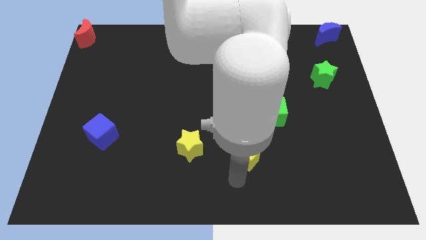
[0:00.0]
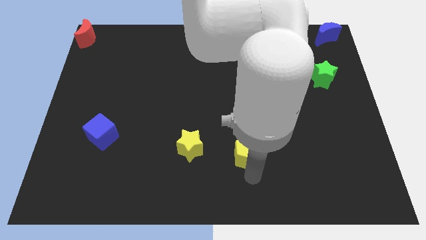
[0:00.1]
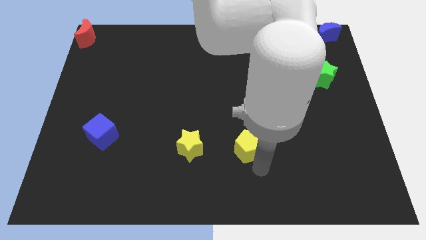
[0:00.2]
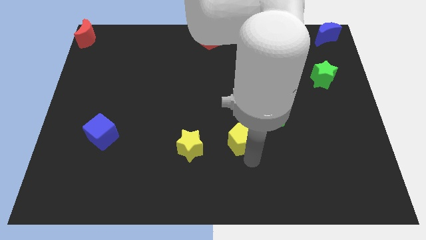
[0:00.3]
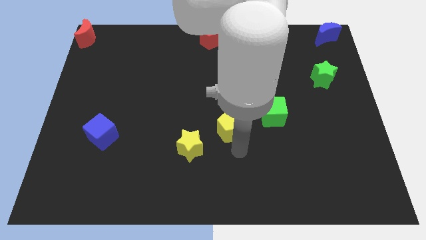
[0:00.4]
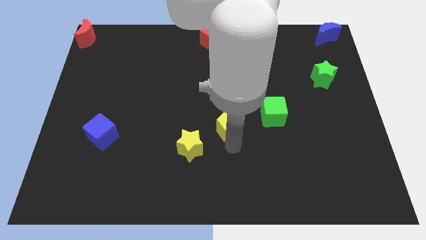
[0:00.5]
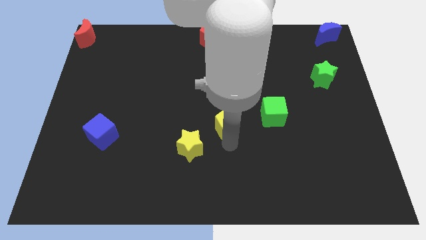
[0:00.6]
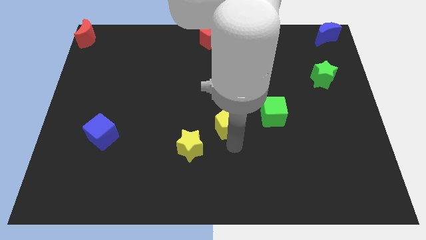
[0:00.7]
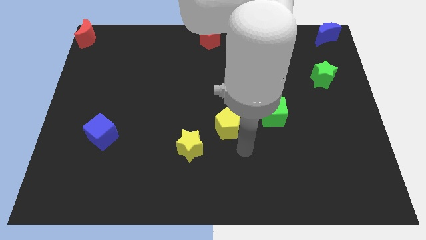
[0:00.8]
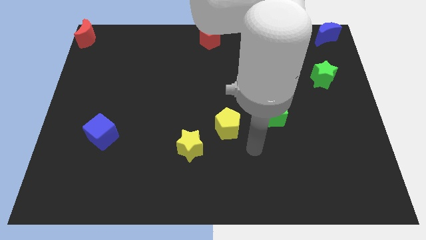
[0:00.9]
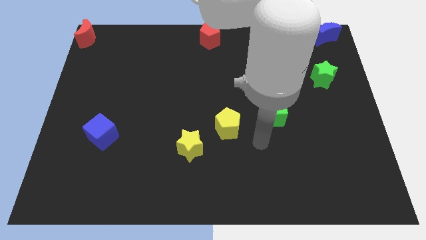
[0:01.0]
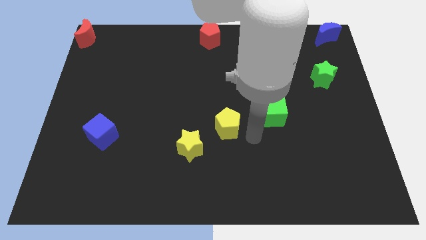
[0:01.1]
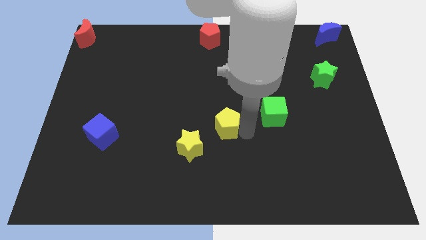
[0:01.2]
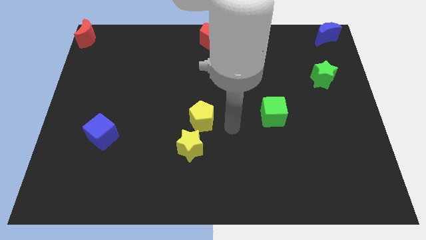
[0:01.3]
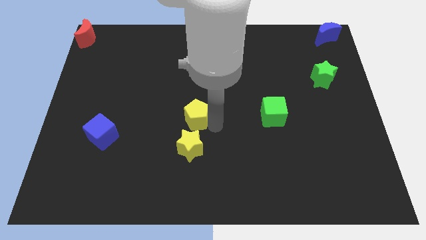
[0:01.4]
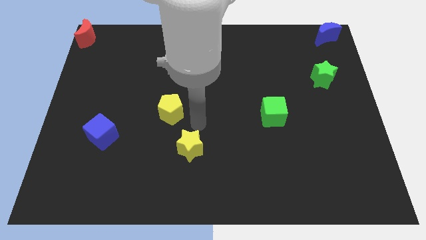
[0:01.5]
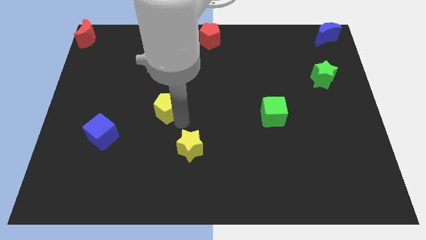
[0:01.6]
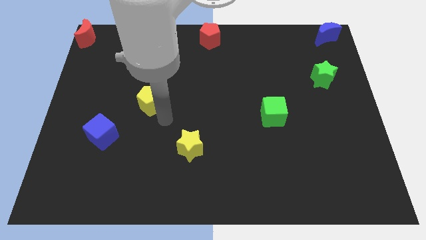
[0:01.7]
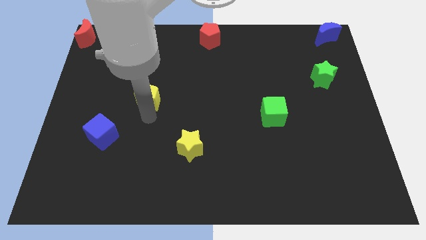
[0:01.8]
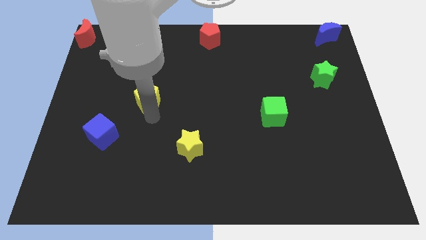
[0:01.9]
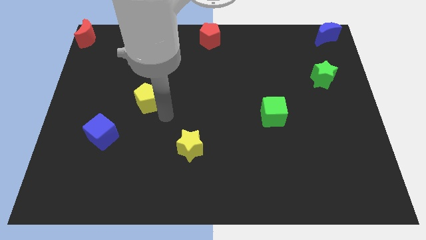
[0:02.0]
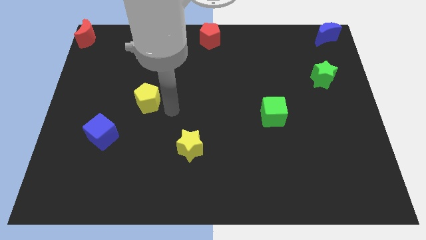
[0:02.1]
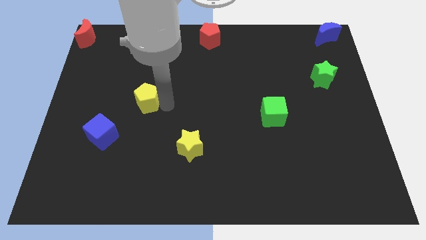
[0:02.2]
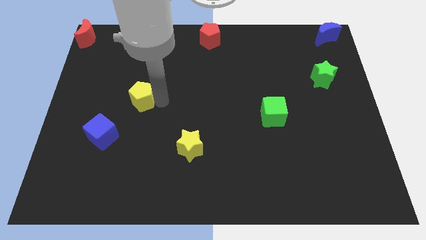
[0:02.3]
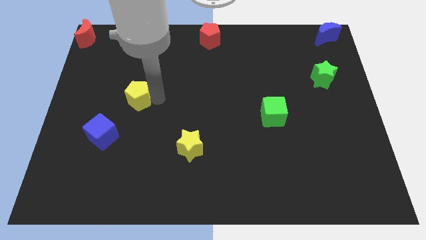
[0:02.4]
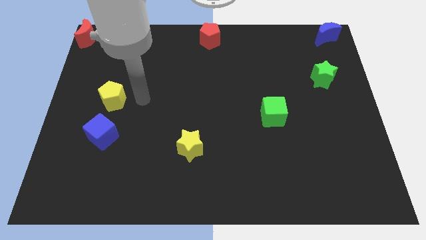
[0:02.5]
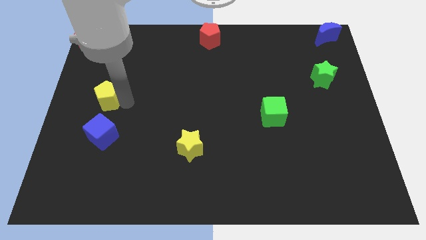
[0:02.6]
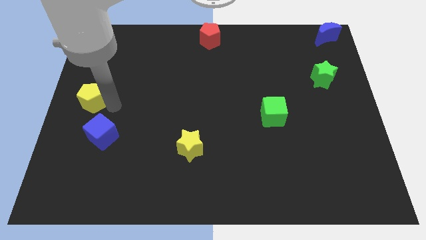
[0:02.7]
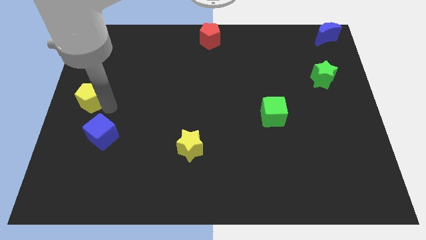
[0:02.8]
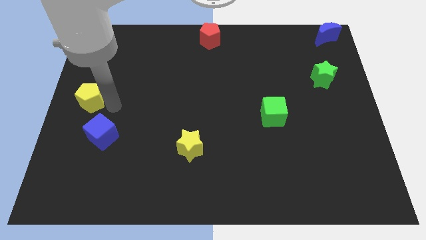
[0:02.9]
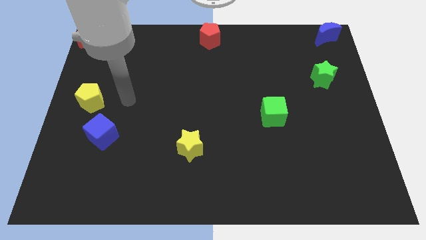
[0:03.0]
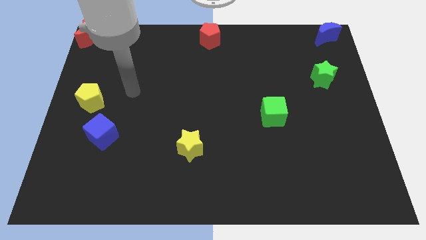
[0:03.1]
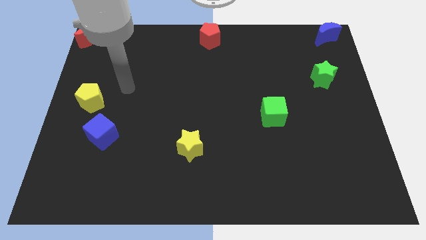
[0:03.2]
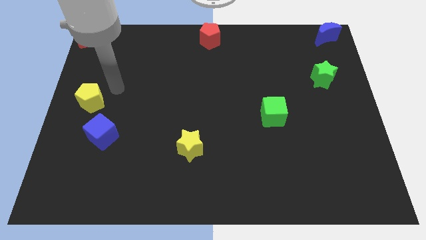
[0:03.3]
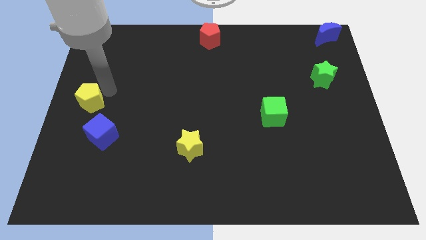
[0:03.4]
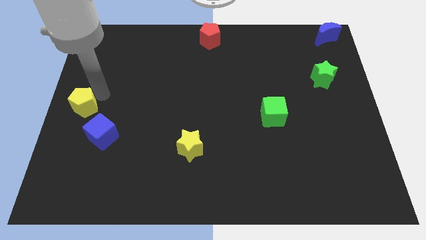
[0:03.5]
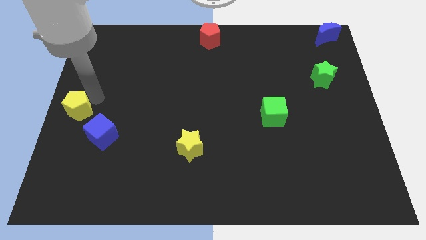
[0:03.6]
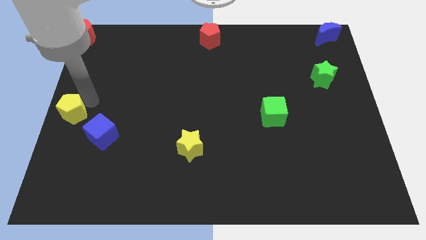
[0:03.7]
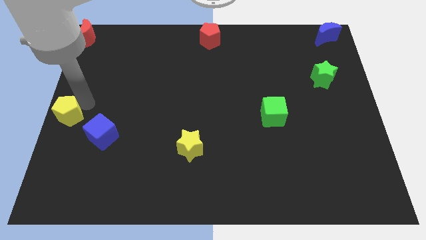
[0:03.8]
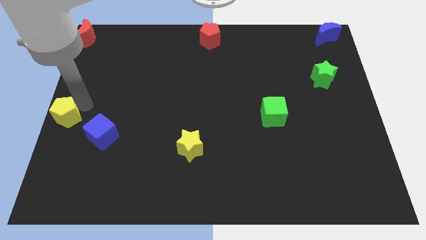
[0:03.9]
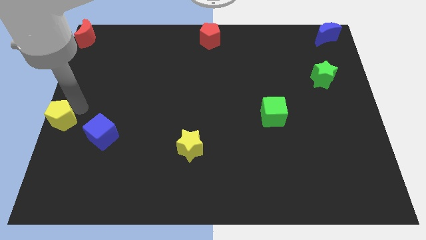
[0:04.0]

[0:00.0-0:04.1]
move the yellow pentagon to the middle left of the board

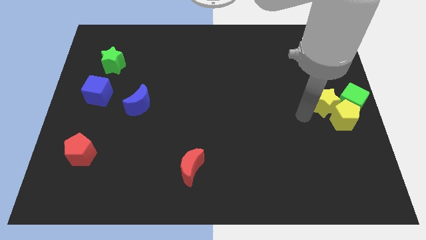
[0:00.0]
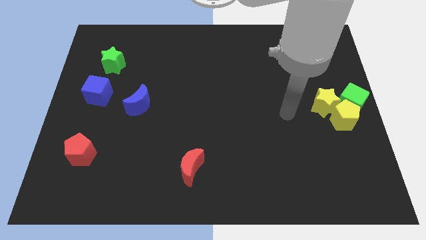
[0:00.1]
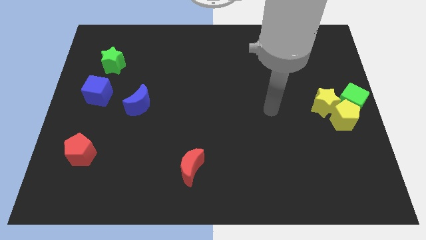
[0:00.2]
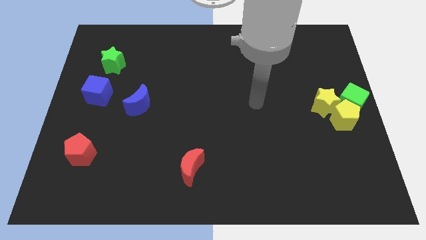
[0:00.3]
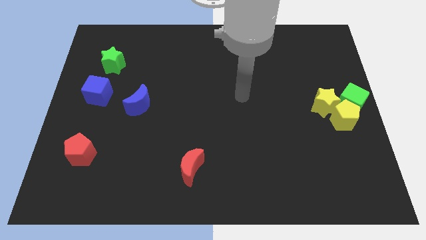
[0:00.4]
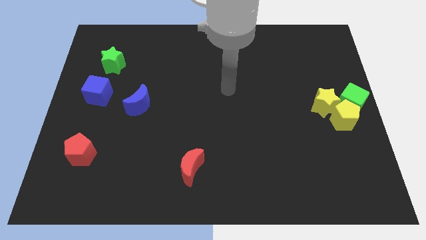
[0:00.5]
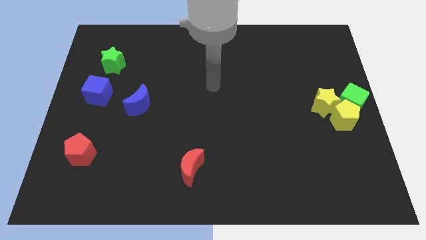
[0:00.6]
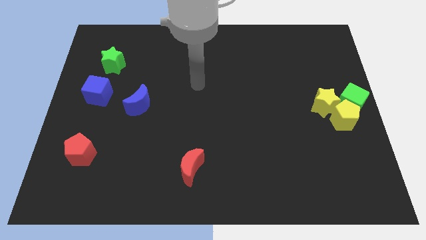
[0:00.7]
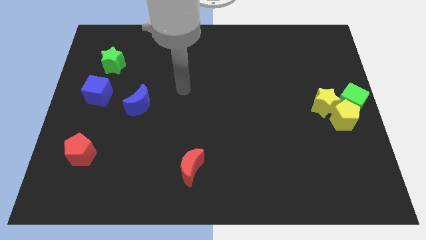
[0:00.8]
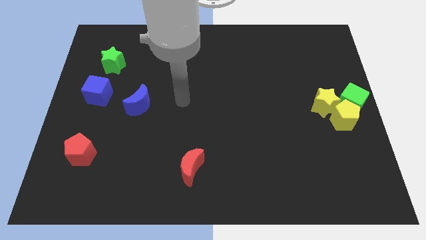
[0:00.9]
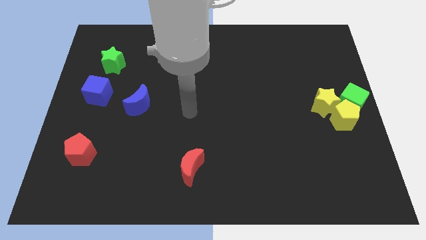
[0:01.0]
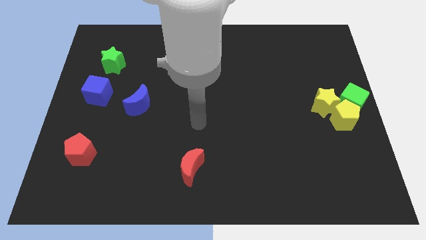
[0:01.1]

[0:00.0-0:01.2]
point the arm above the red moon

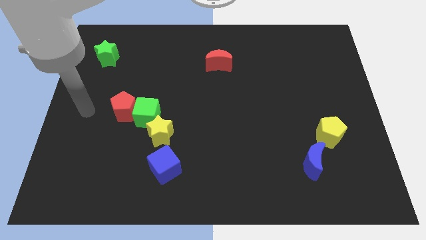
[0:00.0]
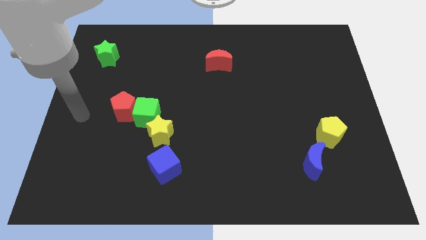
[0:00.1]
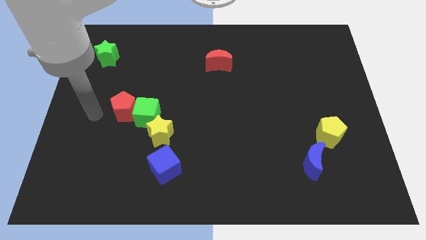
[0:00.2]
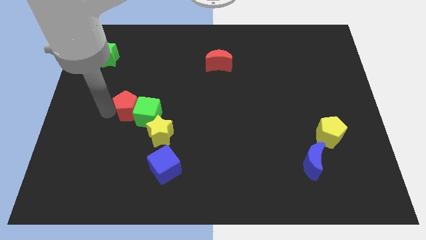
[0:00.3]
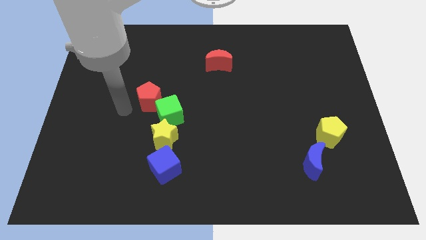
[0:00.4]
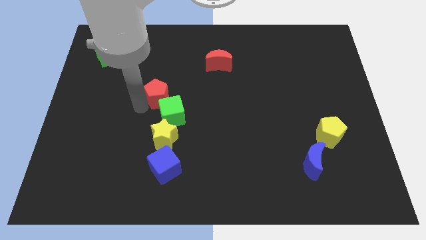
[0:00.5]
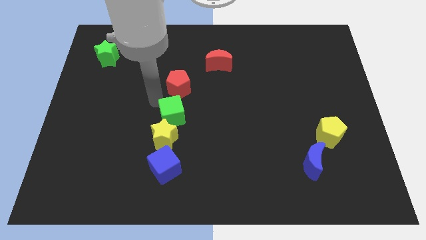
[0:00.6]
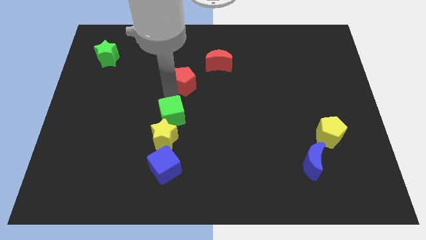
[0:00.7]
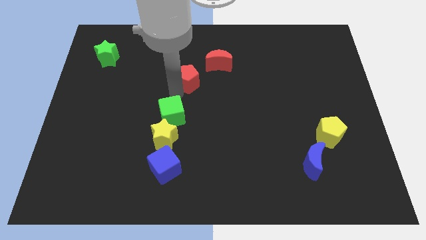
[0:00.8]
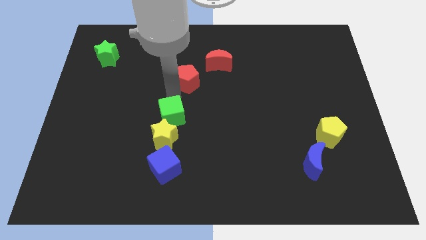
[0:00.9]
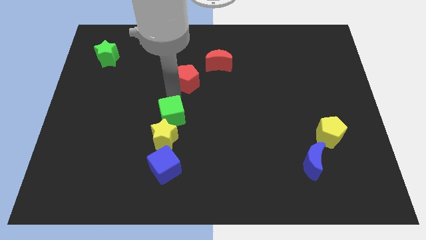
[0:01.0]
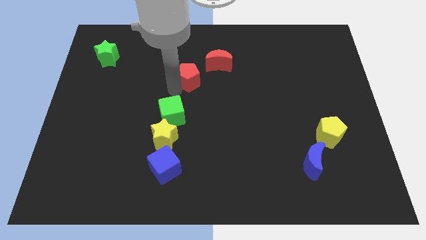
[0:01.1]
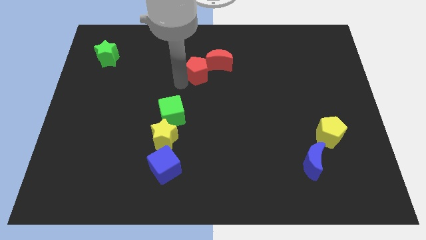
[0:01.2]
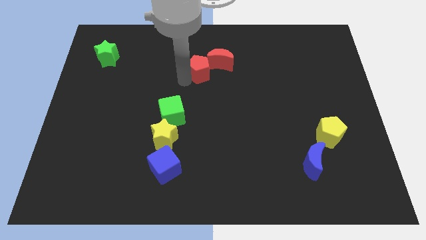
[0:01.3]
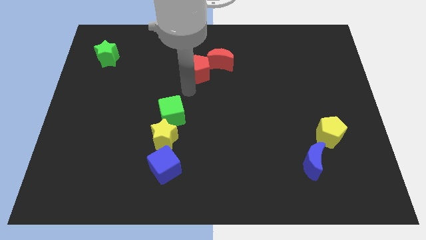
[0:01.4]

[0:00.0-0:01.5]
push red pentagon into red moon

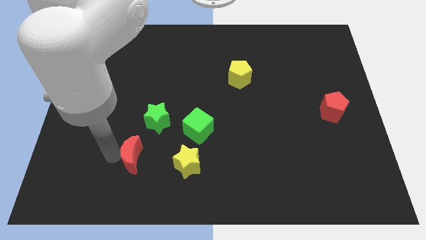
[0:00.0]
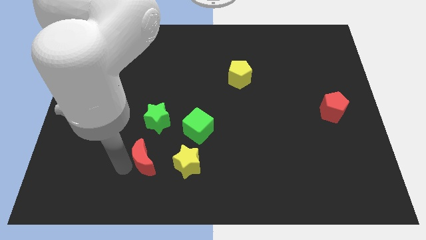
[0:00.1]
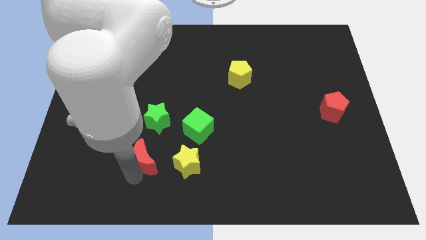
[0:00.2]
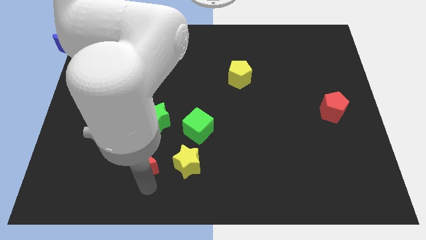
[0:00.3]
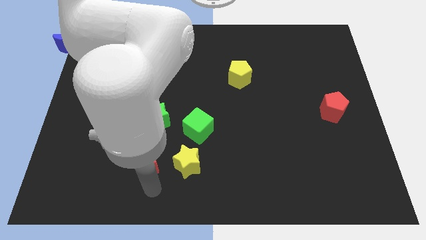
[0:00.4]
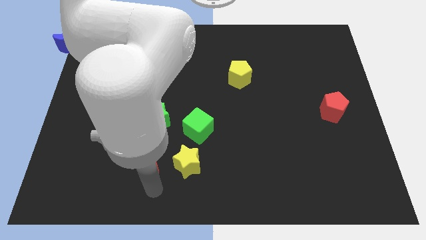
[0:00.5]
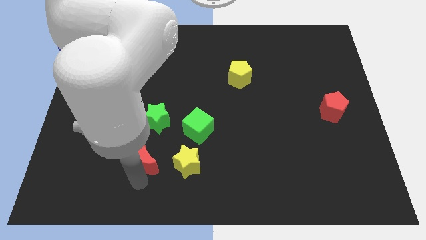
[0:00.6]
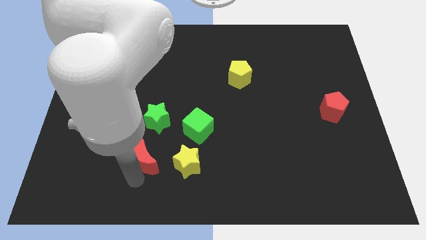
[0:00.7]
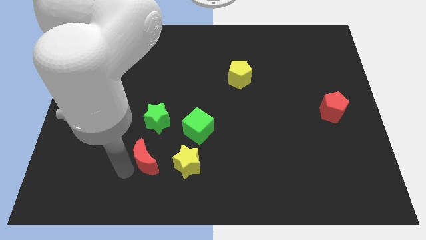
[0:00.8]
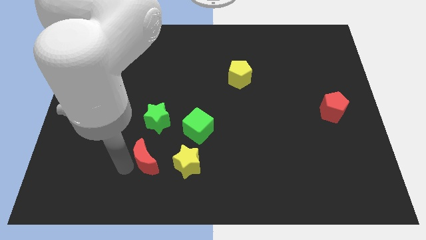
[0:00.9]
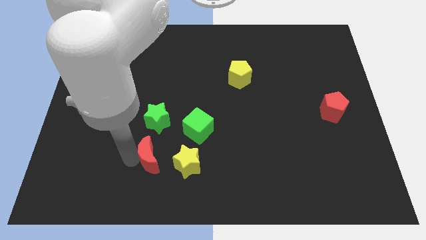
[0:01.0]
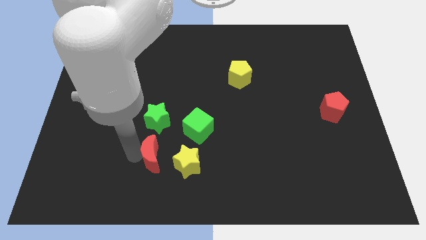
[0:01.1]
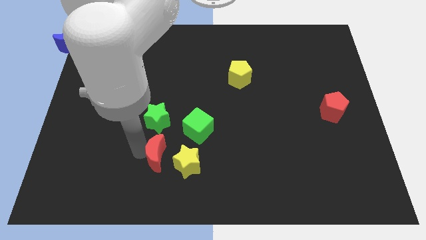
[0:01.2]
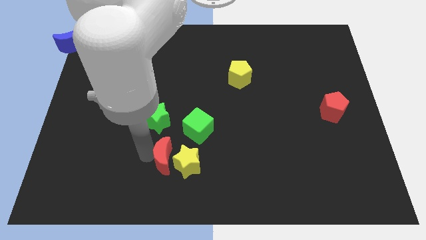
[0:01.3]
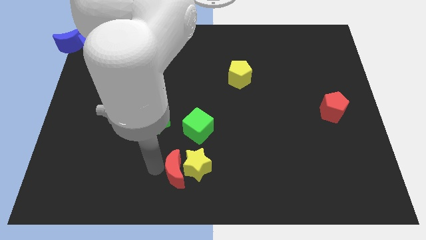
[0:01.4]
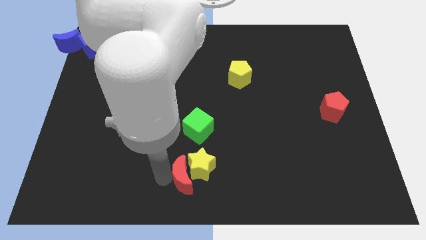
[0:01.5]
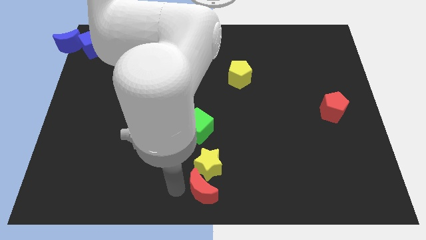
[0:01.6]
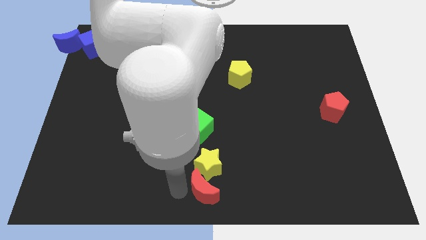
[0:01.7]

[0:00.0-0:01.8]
slide the red crescent at the bottom side of the yellow star

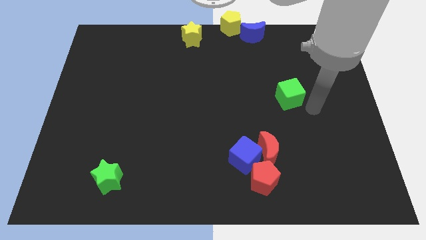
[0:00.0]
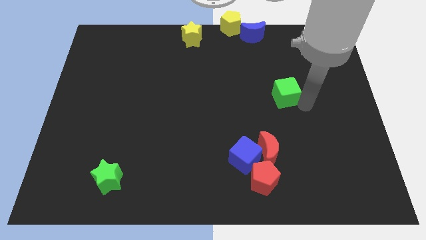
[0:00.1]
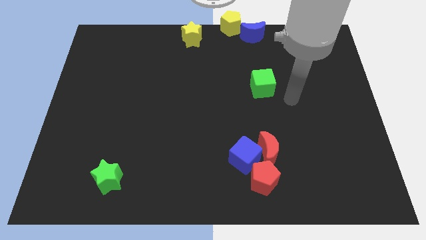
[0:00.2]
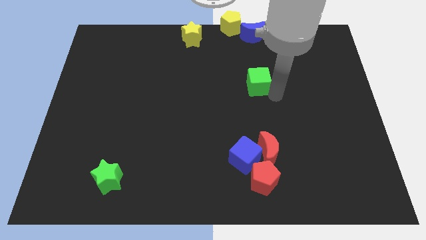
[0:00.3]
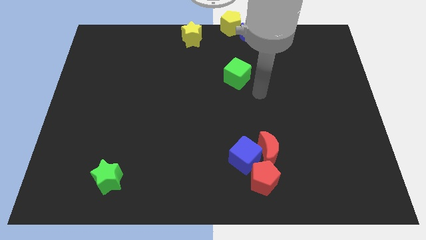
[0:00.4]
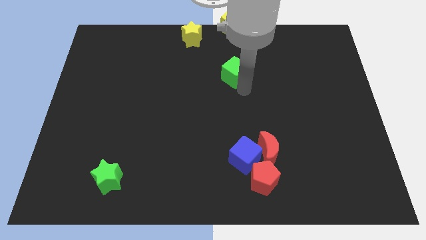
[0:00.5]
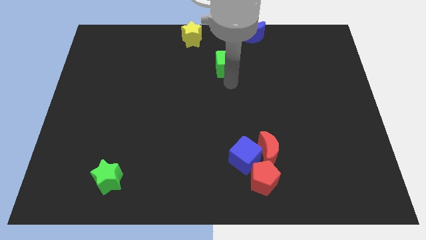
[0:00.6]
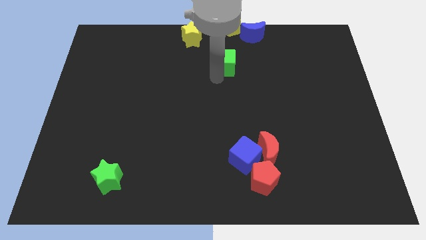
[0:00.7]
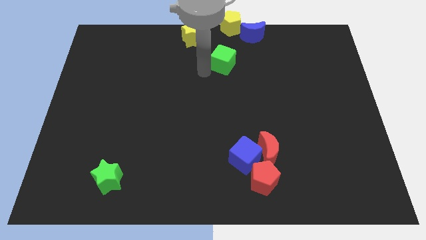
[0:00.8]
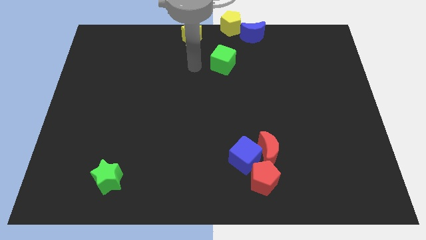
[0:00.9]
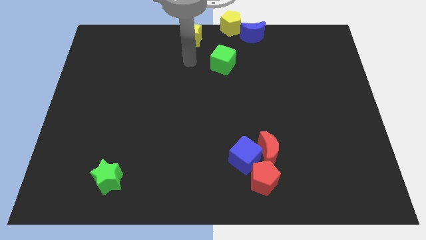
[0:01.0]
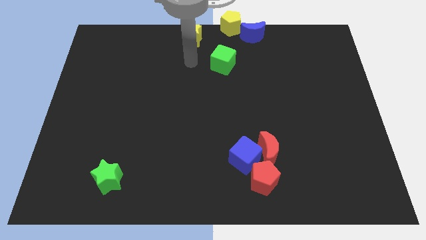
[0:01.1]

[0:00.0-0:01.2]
place the green cube below the yellow pentagon
